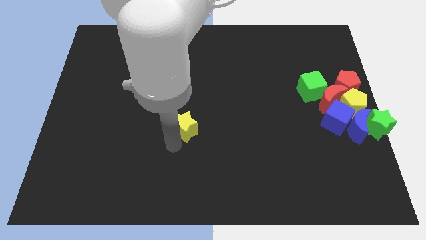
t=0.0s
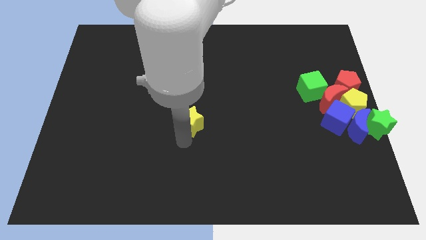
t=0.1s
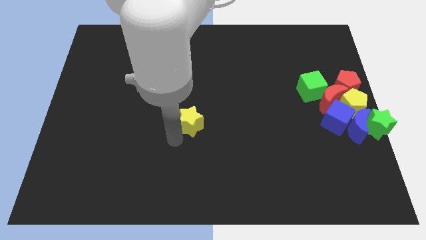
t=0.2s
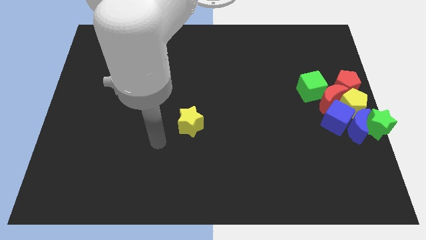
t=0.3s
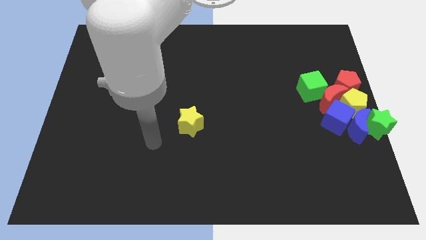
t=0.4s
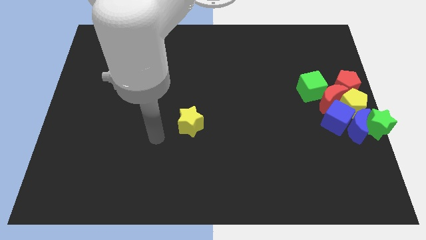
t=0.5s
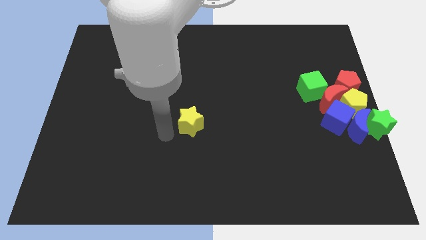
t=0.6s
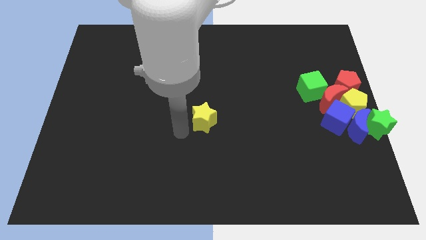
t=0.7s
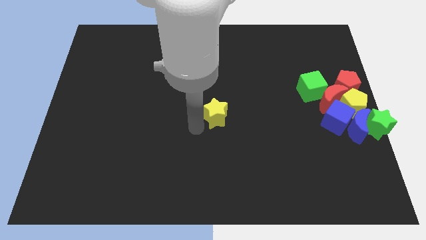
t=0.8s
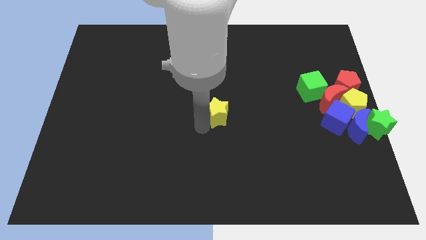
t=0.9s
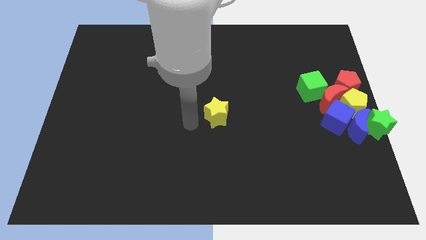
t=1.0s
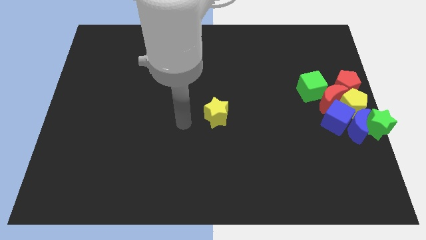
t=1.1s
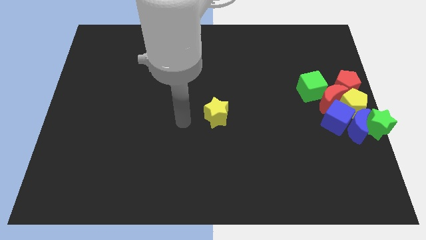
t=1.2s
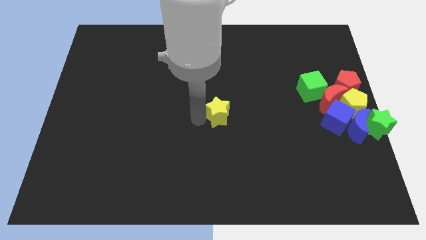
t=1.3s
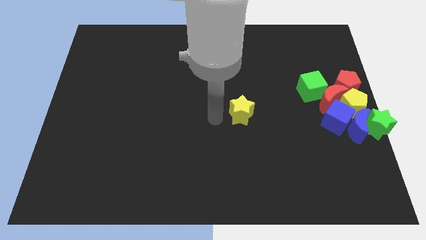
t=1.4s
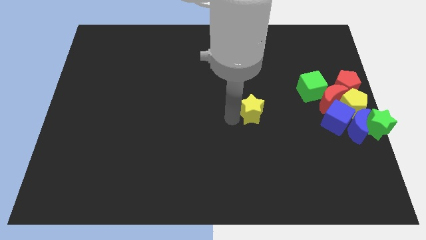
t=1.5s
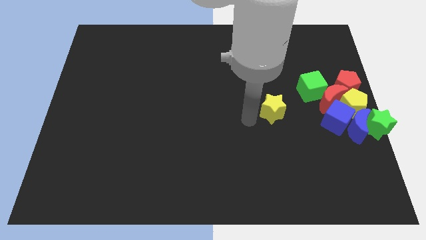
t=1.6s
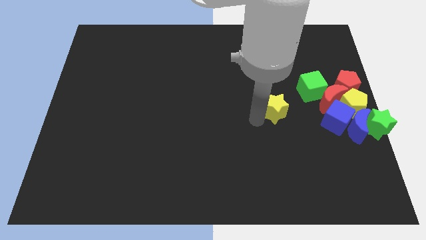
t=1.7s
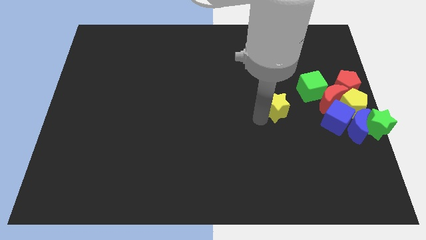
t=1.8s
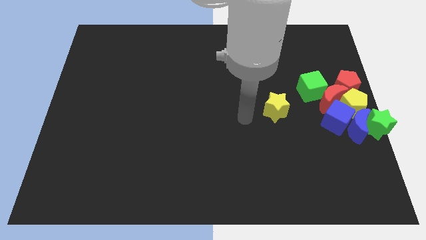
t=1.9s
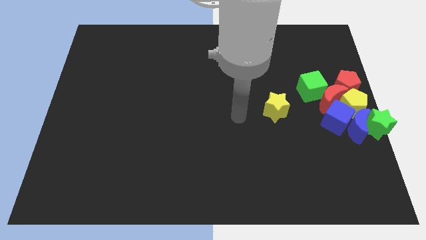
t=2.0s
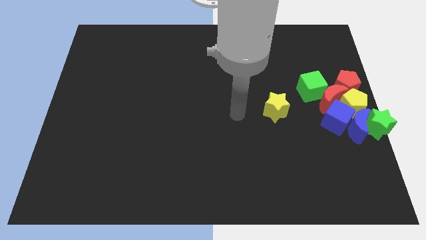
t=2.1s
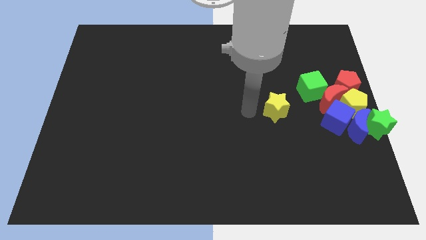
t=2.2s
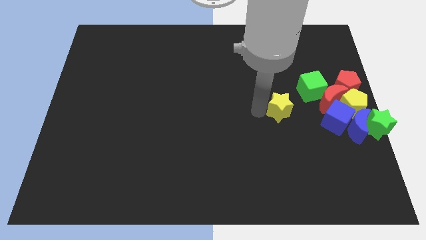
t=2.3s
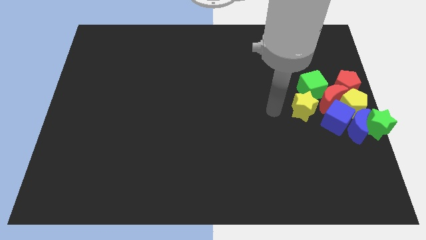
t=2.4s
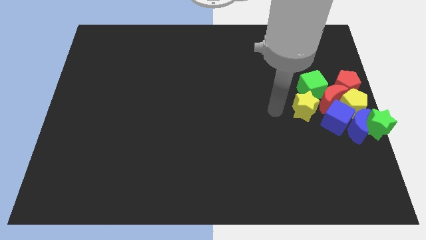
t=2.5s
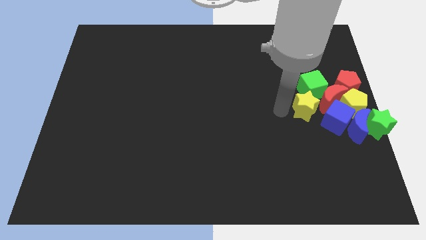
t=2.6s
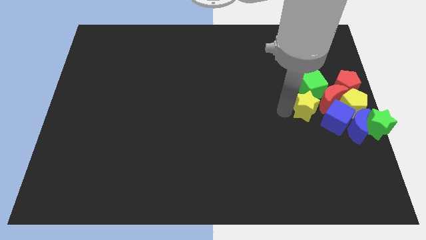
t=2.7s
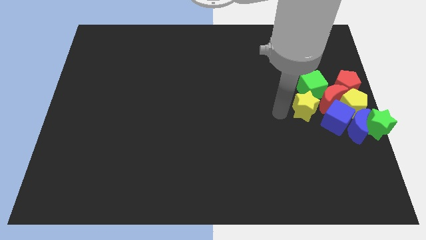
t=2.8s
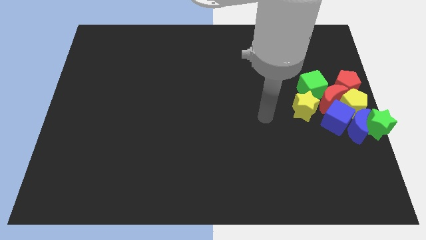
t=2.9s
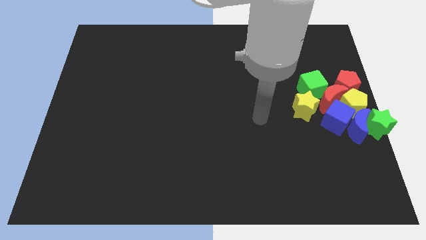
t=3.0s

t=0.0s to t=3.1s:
place yellow star below green cube

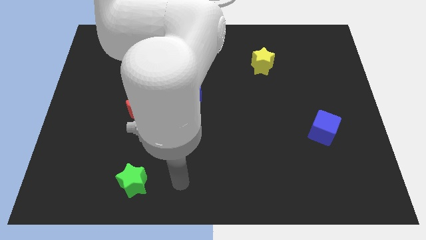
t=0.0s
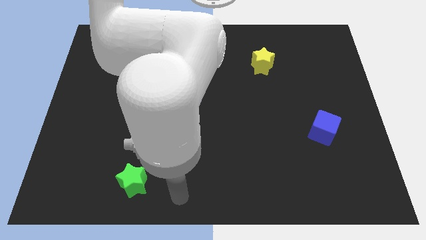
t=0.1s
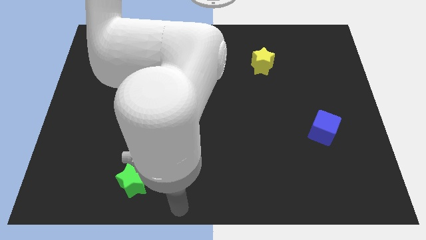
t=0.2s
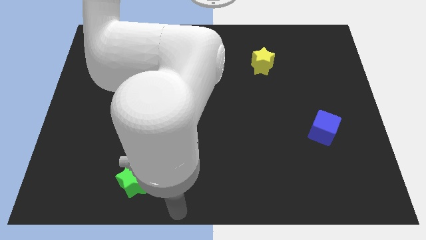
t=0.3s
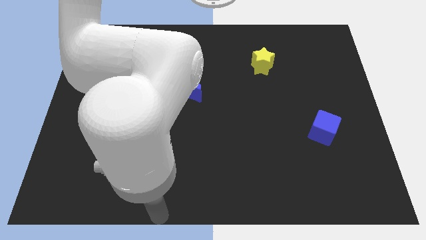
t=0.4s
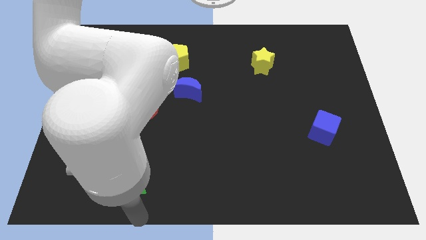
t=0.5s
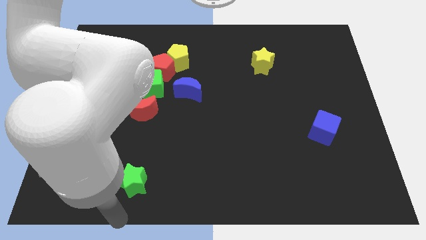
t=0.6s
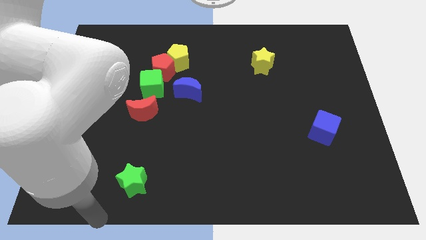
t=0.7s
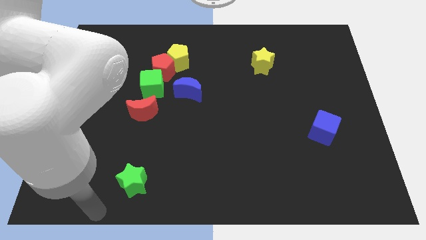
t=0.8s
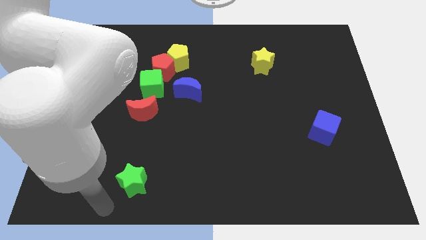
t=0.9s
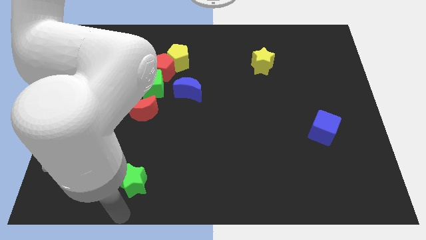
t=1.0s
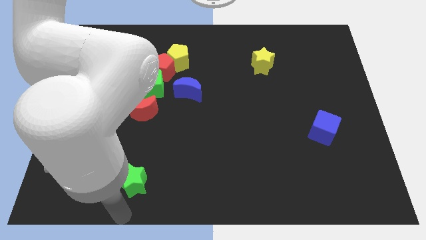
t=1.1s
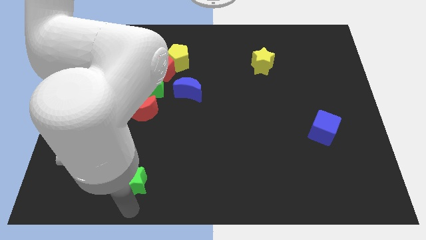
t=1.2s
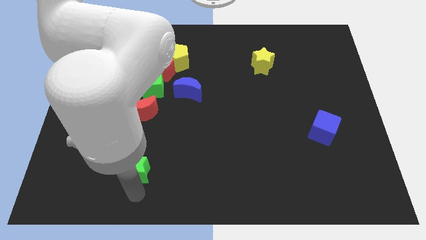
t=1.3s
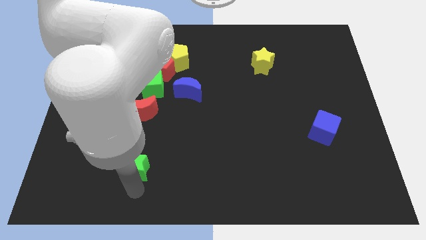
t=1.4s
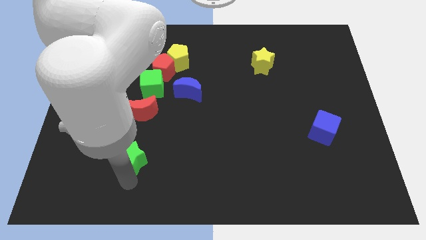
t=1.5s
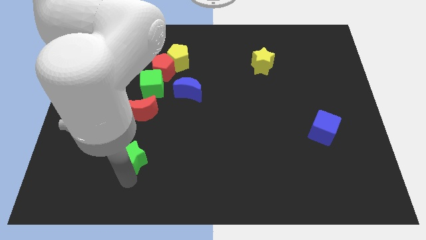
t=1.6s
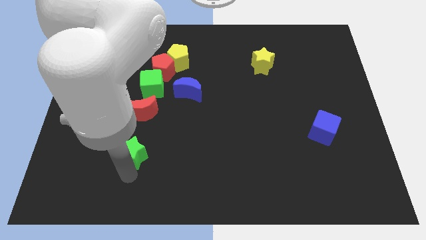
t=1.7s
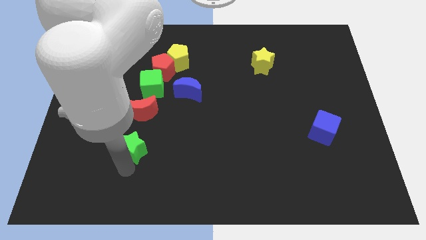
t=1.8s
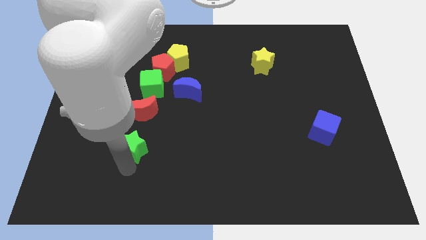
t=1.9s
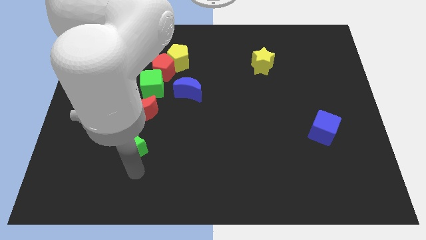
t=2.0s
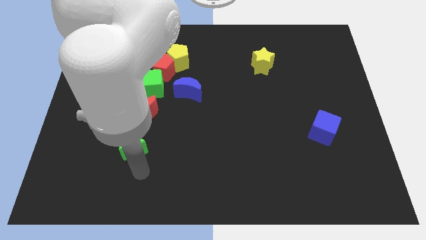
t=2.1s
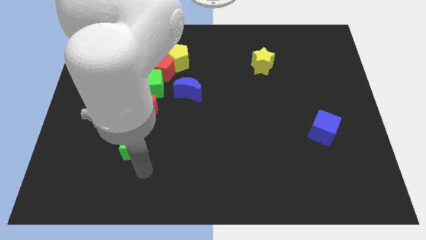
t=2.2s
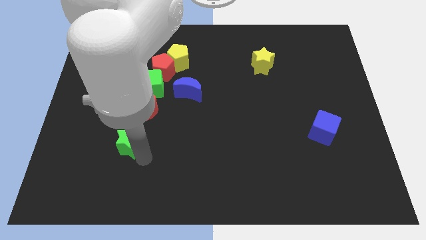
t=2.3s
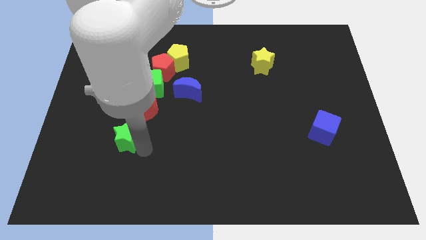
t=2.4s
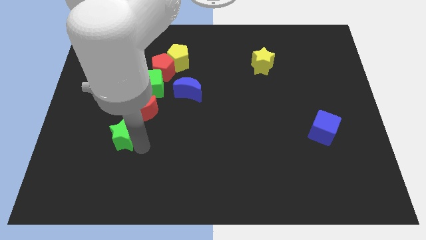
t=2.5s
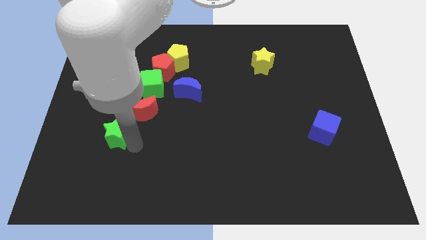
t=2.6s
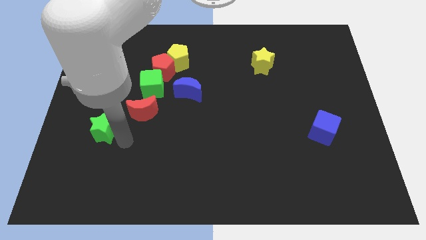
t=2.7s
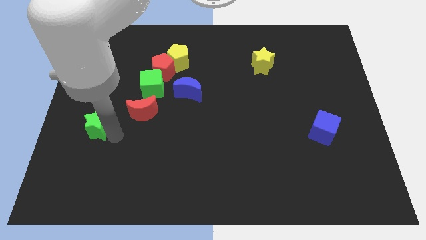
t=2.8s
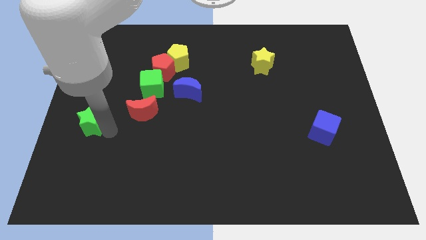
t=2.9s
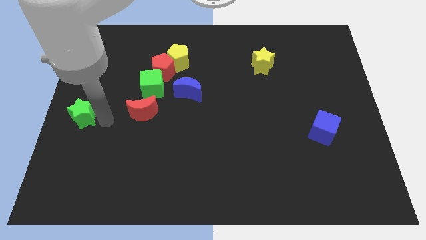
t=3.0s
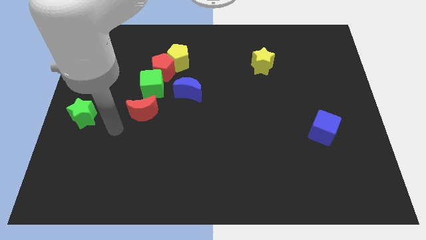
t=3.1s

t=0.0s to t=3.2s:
move the green star diagonal to the left of red crescent

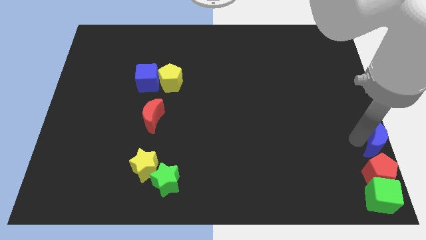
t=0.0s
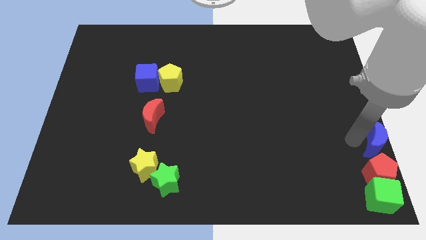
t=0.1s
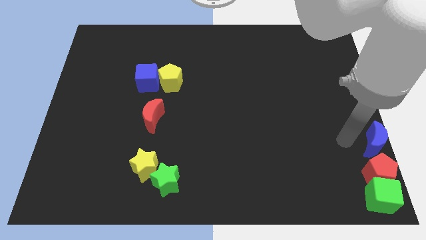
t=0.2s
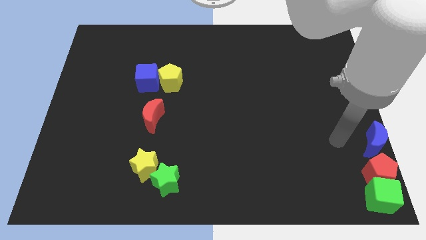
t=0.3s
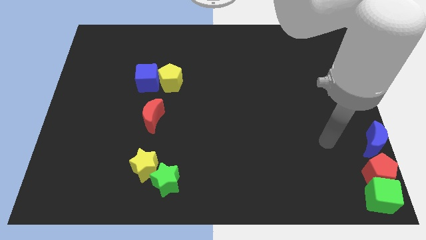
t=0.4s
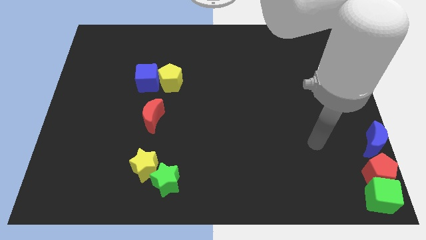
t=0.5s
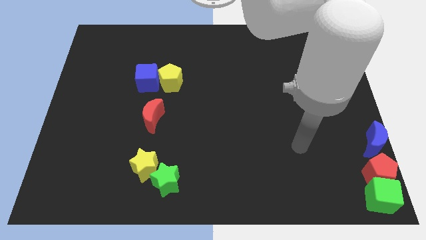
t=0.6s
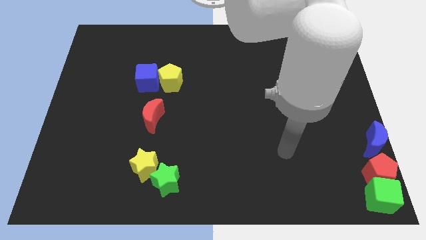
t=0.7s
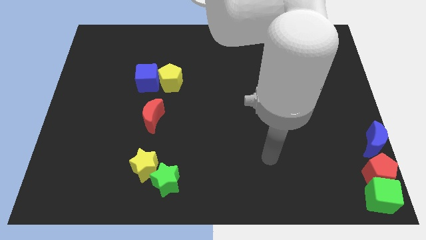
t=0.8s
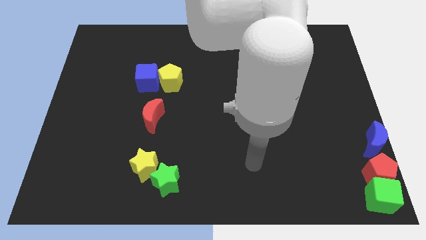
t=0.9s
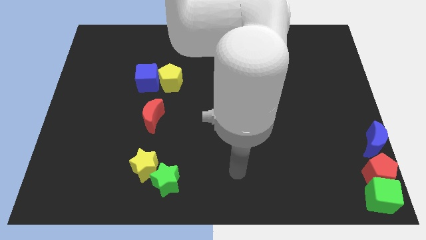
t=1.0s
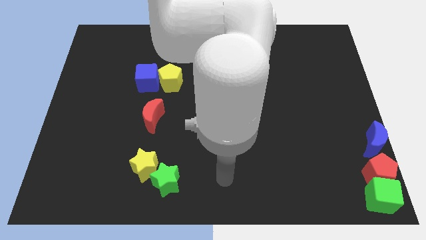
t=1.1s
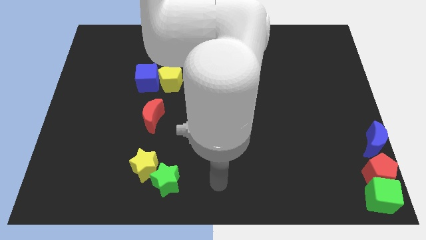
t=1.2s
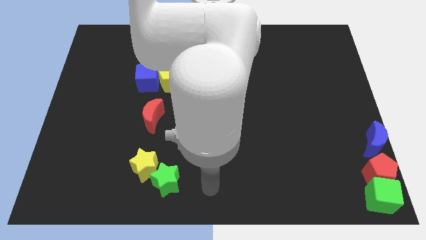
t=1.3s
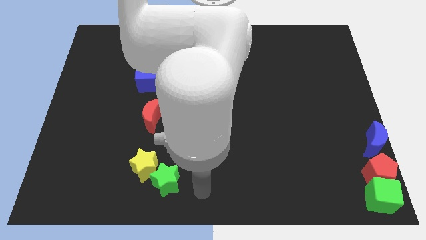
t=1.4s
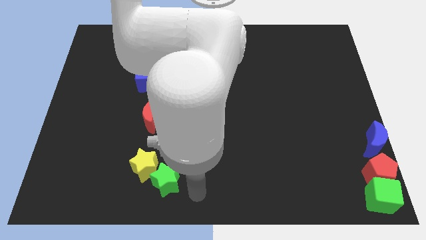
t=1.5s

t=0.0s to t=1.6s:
move the arm towards the green star

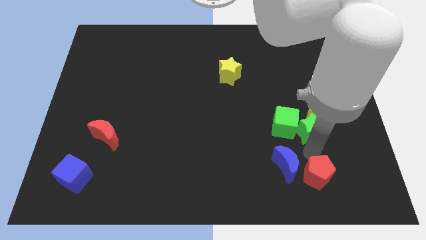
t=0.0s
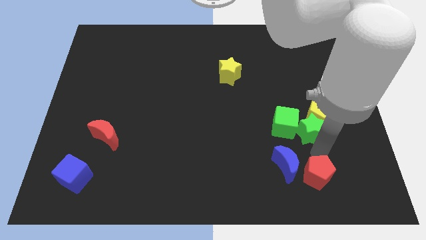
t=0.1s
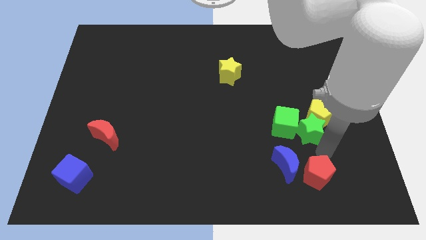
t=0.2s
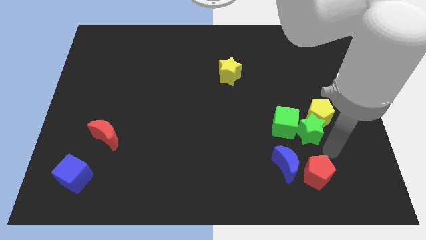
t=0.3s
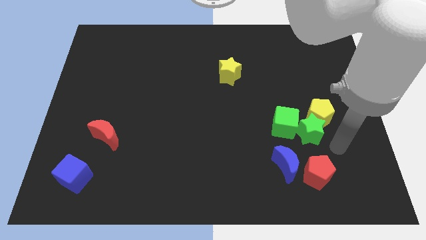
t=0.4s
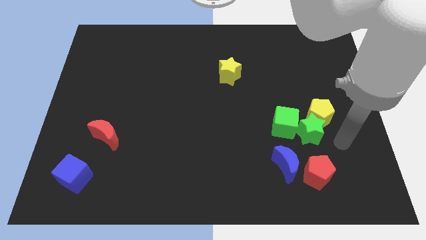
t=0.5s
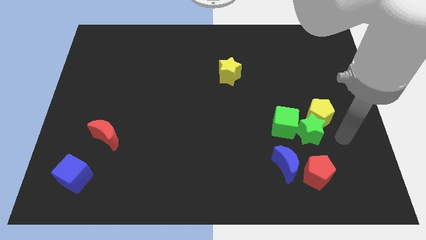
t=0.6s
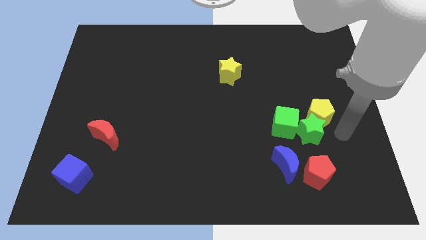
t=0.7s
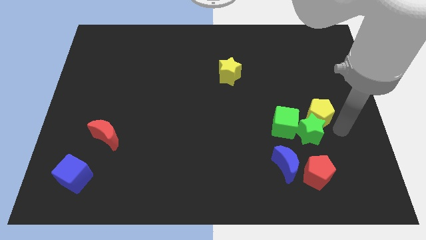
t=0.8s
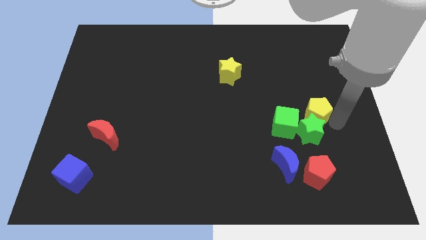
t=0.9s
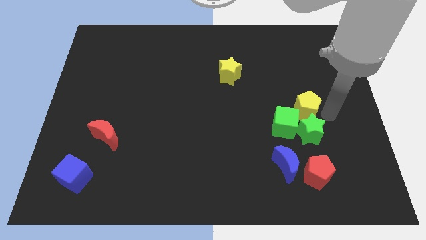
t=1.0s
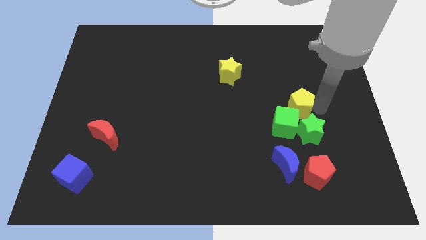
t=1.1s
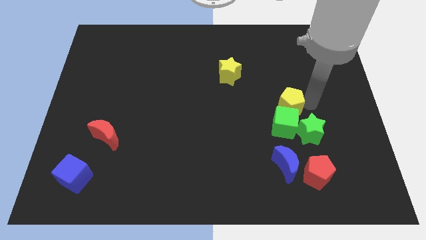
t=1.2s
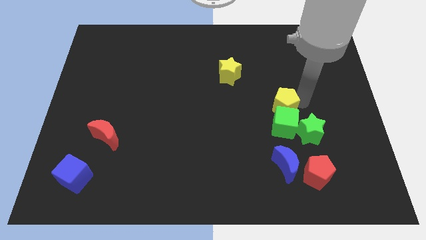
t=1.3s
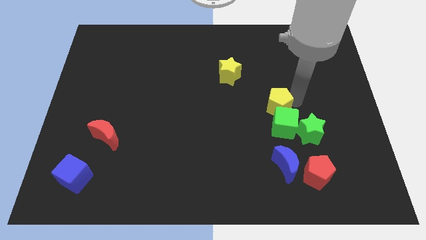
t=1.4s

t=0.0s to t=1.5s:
push the yellow pentagon above the green cube
